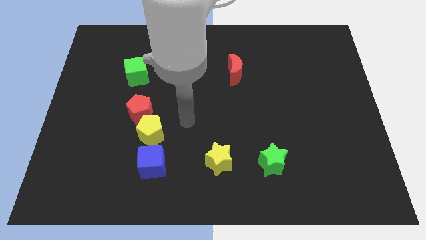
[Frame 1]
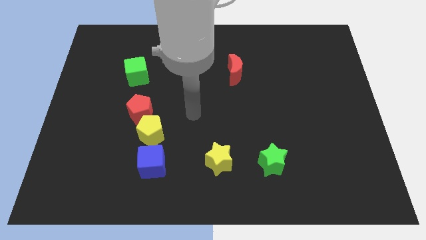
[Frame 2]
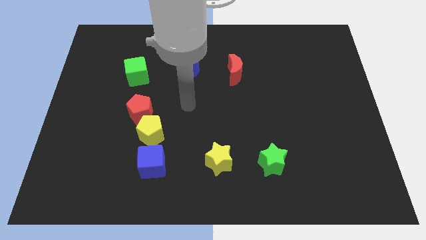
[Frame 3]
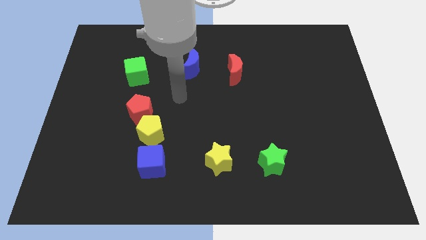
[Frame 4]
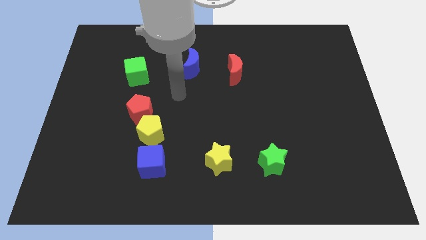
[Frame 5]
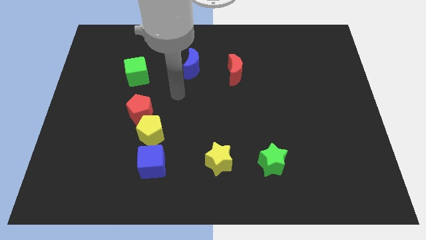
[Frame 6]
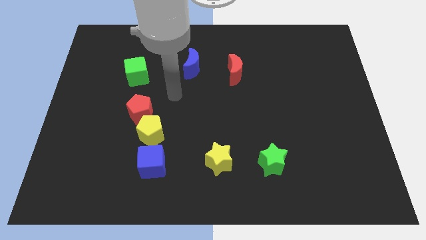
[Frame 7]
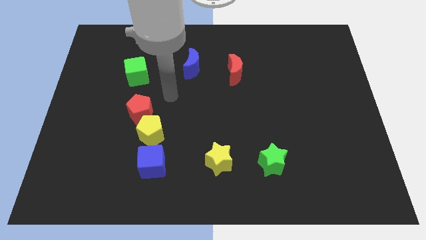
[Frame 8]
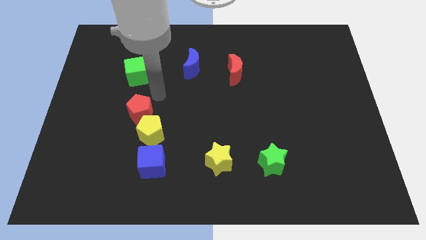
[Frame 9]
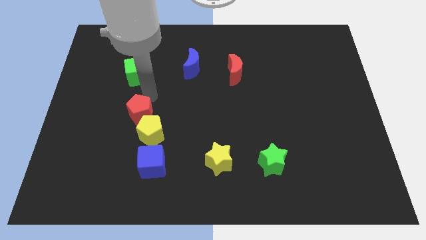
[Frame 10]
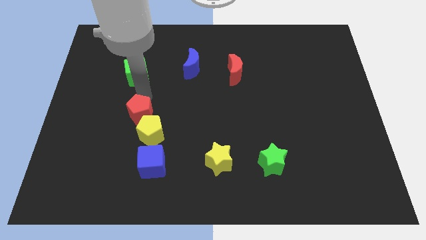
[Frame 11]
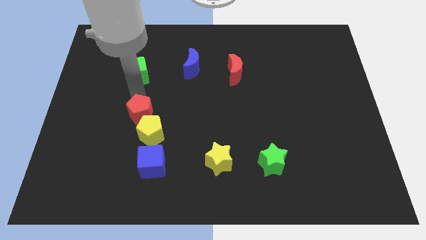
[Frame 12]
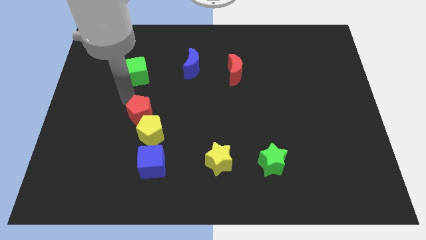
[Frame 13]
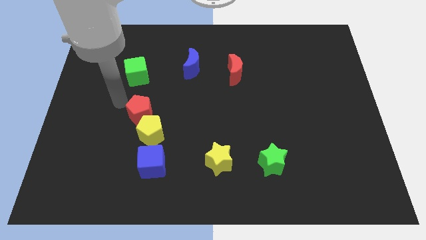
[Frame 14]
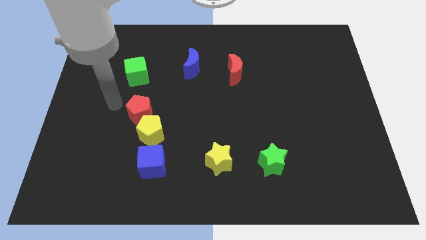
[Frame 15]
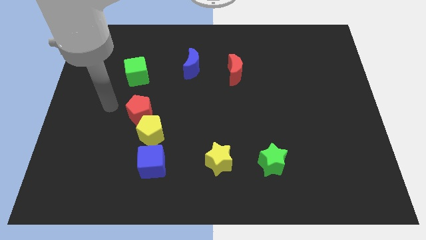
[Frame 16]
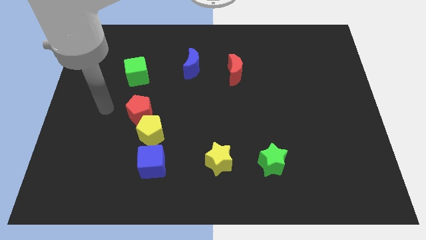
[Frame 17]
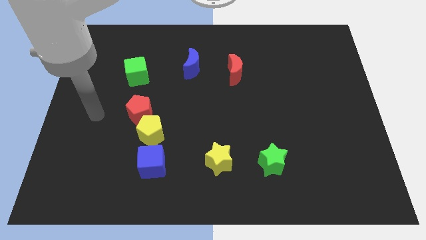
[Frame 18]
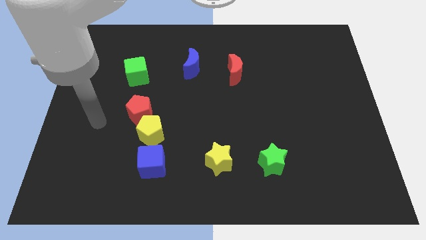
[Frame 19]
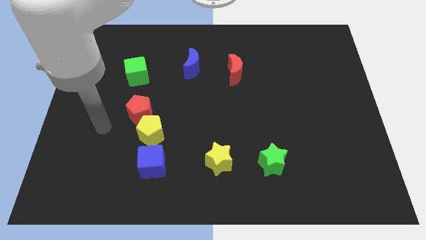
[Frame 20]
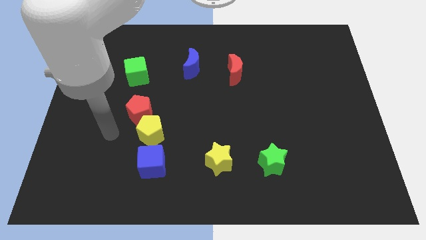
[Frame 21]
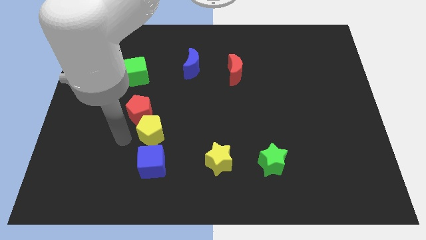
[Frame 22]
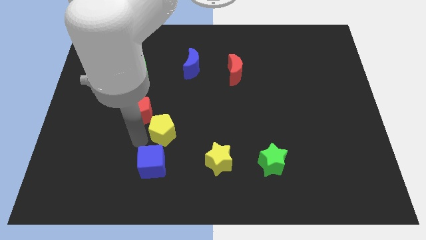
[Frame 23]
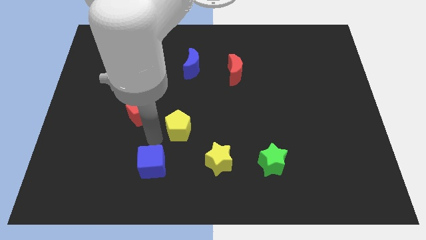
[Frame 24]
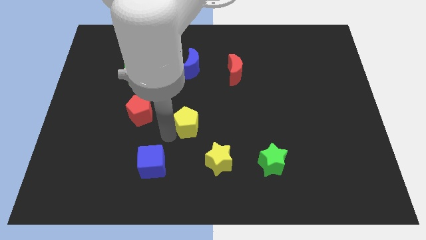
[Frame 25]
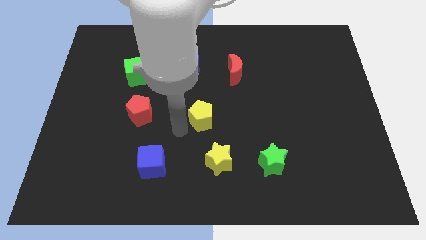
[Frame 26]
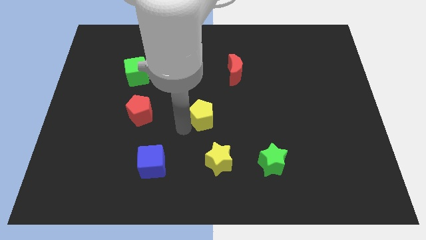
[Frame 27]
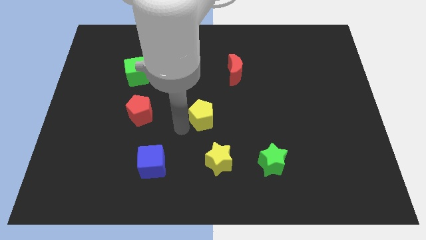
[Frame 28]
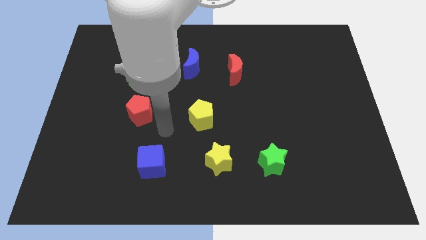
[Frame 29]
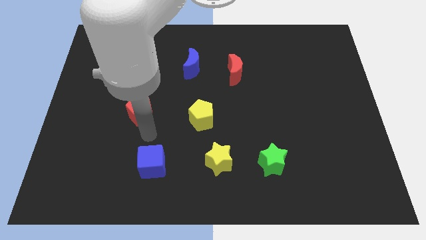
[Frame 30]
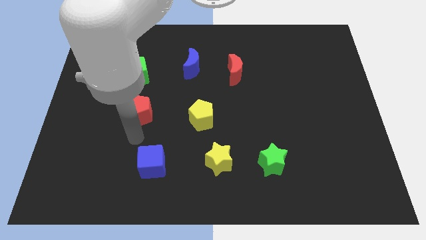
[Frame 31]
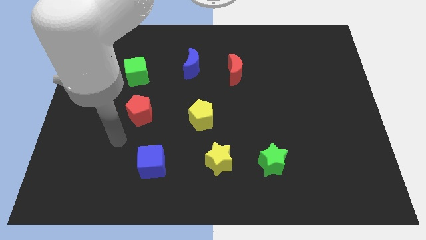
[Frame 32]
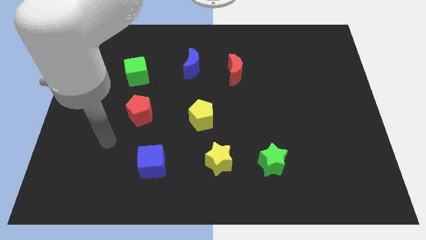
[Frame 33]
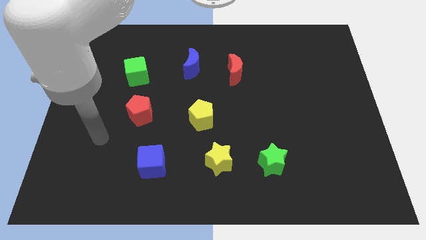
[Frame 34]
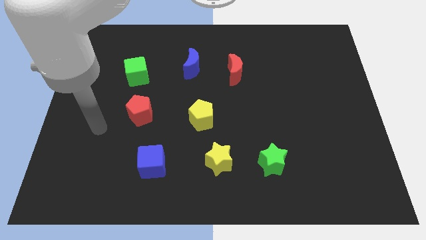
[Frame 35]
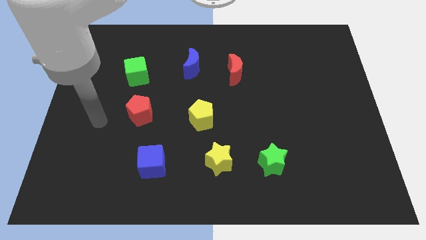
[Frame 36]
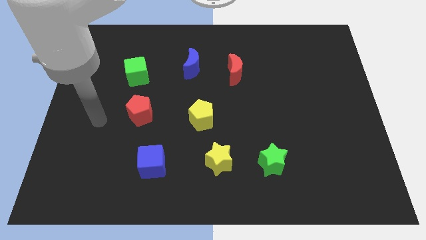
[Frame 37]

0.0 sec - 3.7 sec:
move the yellow pentagon below blue crescent

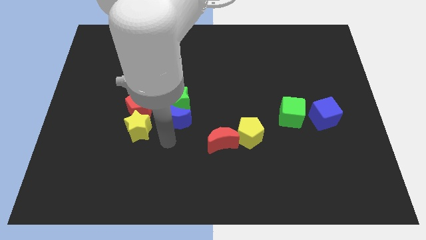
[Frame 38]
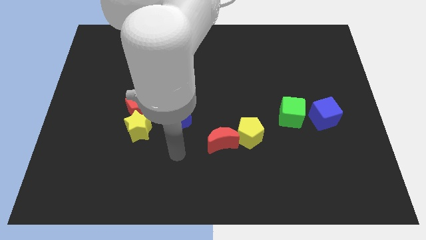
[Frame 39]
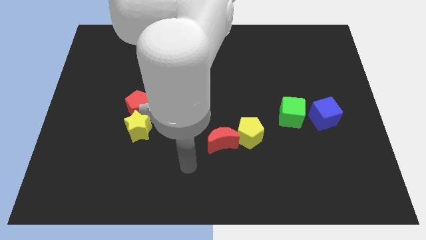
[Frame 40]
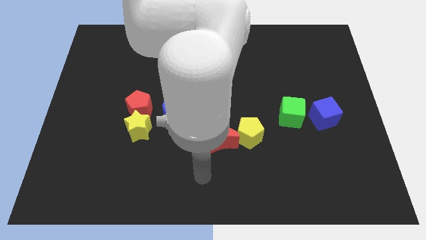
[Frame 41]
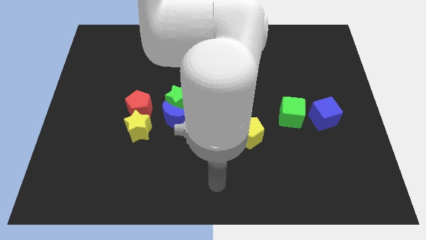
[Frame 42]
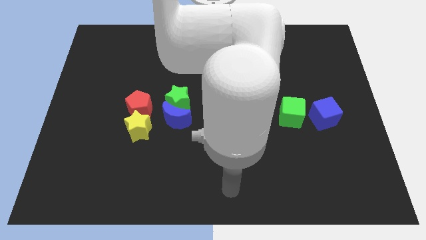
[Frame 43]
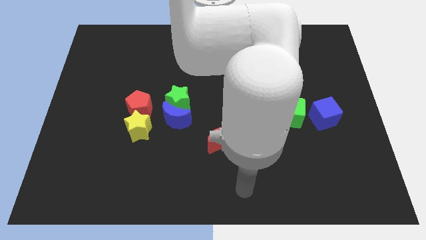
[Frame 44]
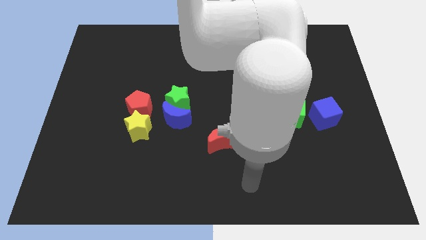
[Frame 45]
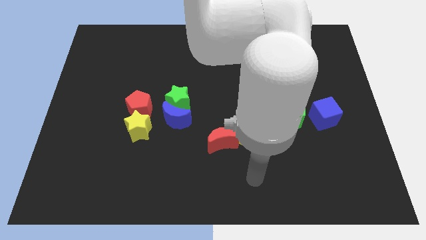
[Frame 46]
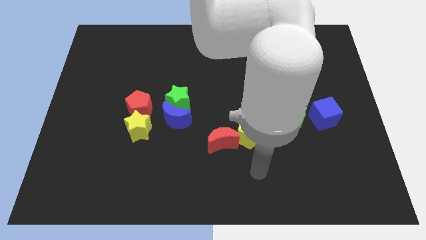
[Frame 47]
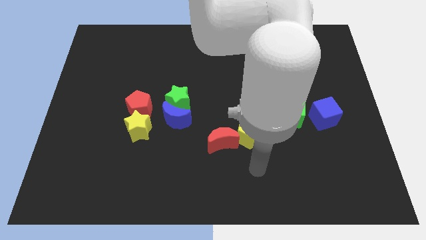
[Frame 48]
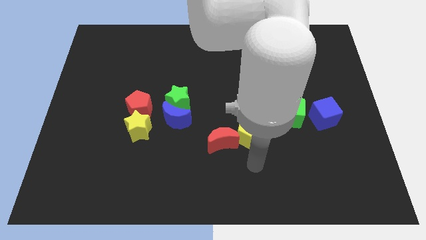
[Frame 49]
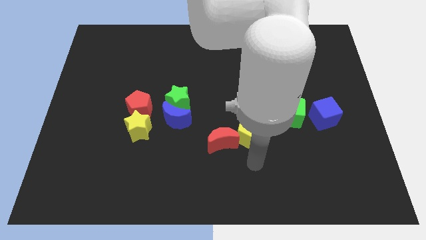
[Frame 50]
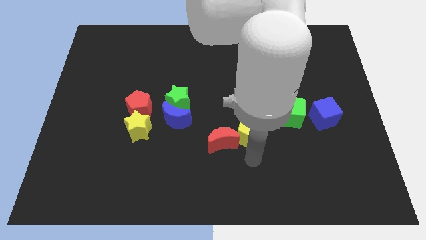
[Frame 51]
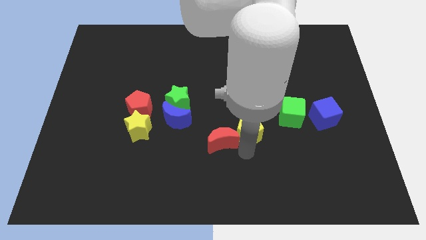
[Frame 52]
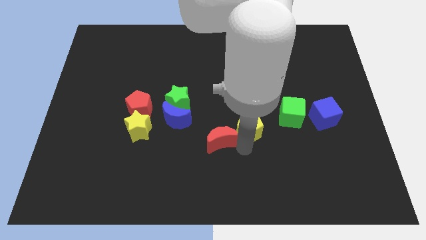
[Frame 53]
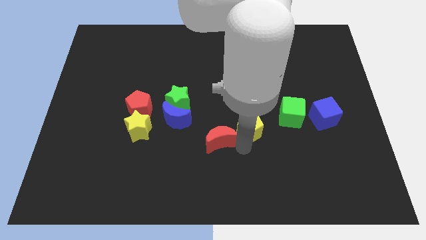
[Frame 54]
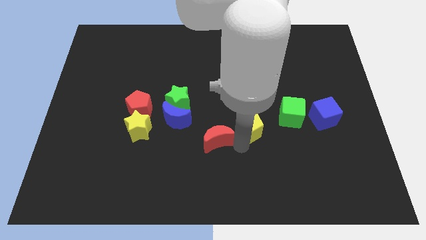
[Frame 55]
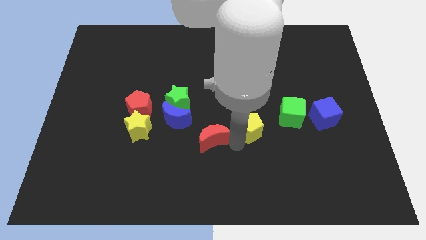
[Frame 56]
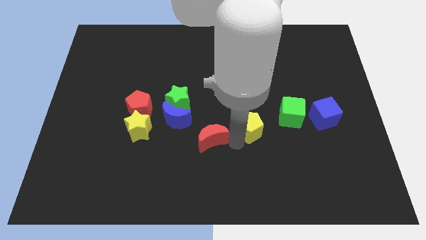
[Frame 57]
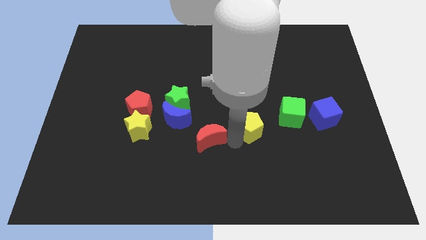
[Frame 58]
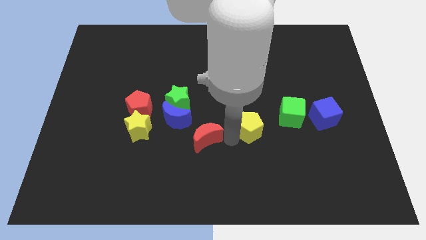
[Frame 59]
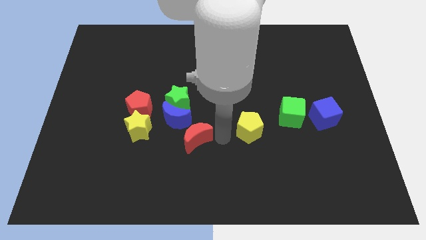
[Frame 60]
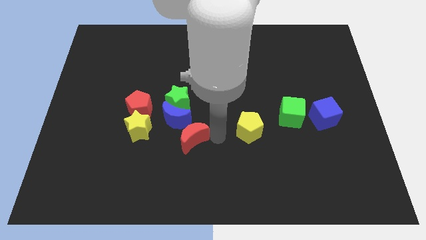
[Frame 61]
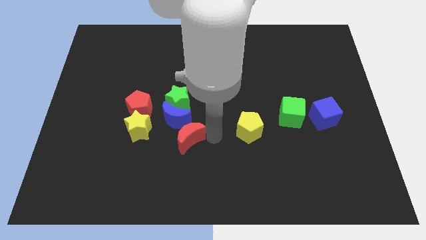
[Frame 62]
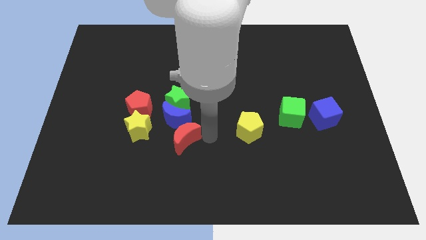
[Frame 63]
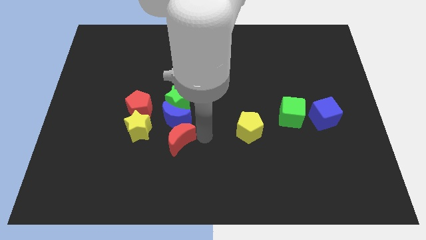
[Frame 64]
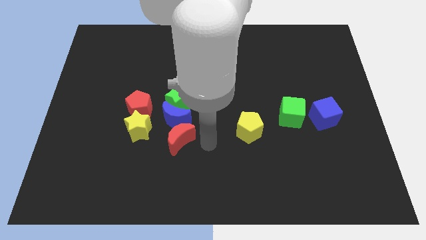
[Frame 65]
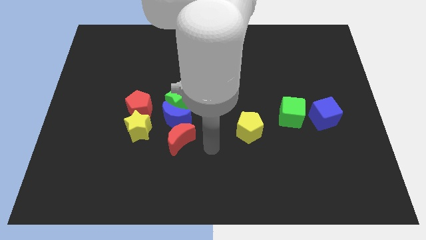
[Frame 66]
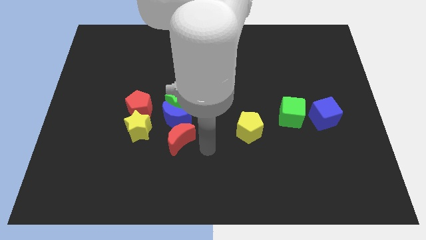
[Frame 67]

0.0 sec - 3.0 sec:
move the red crescent to the bottom of the blue crescent

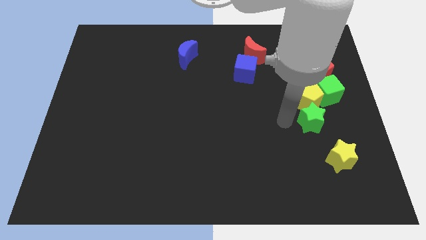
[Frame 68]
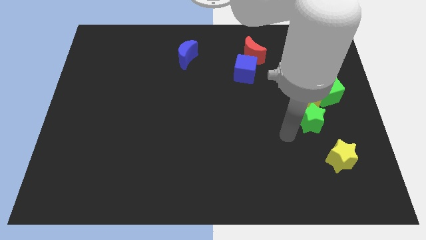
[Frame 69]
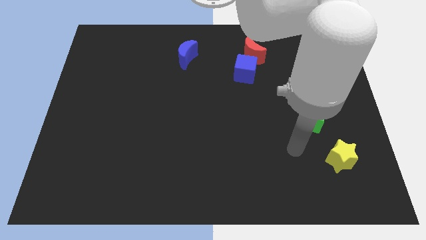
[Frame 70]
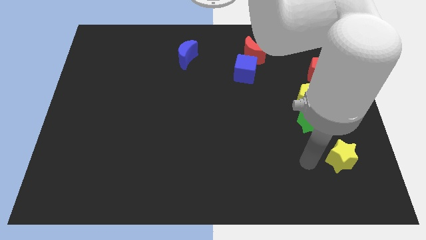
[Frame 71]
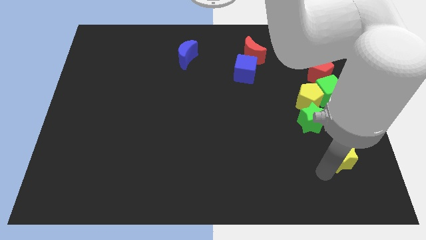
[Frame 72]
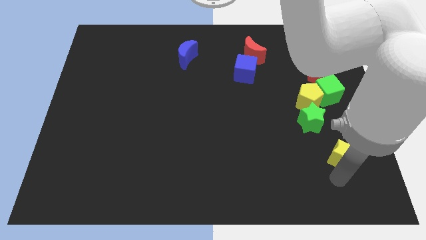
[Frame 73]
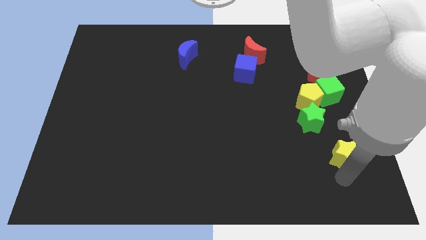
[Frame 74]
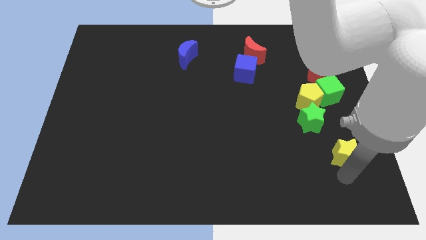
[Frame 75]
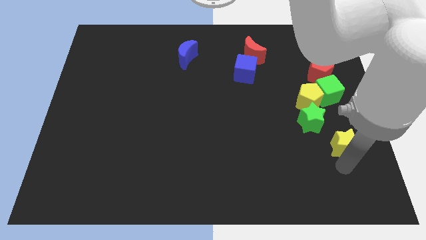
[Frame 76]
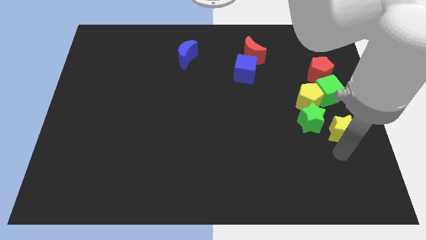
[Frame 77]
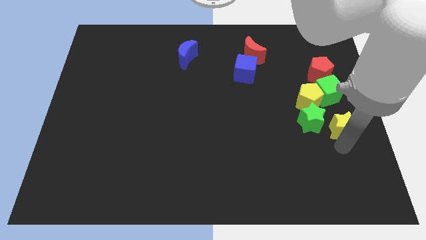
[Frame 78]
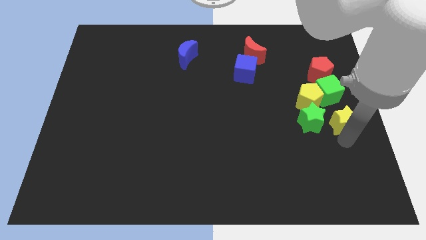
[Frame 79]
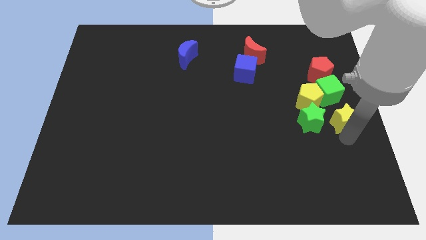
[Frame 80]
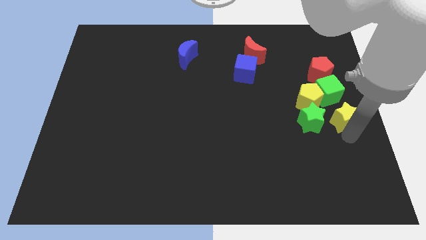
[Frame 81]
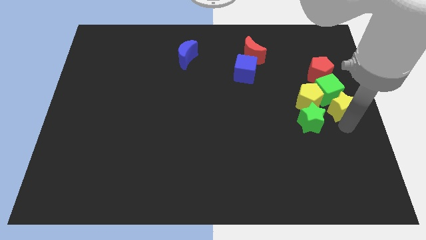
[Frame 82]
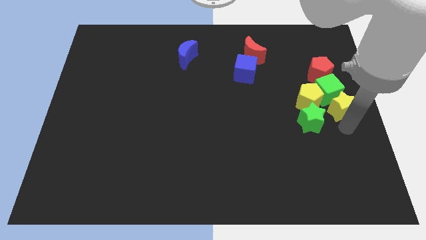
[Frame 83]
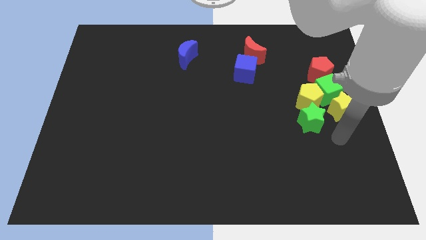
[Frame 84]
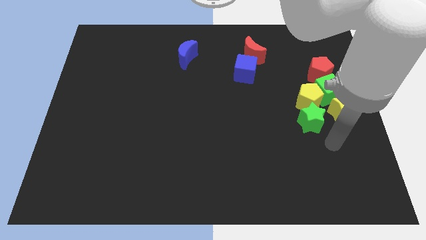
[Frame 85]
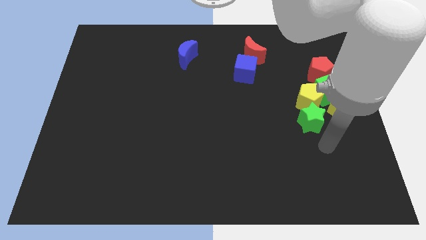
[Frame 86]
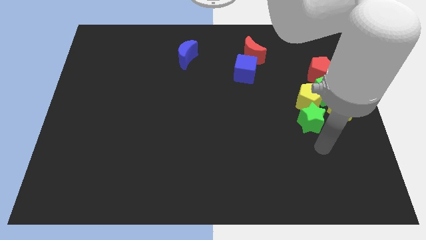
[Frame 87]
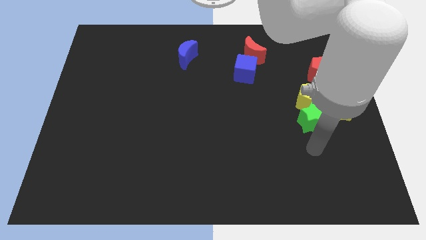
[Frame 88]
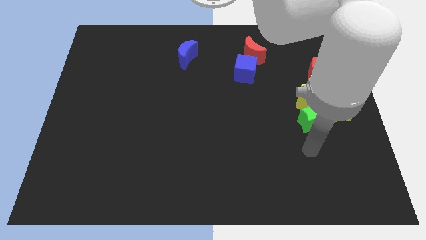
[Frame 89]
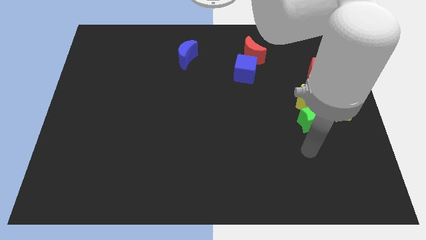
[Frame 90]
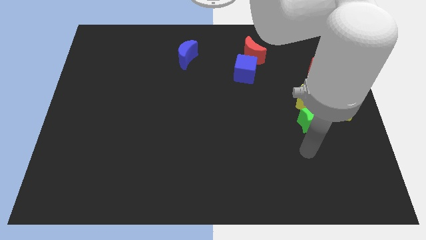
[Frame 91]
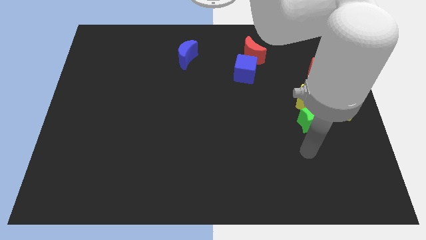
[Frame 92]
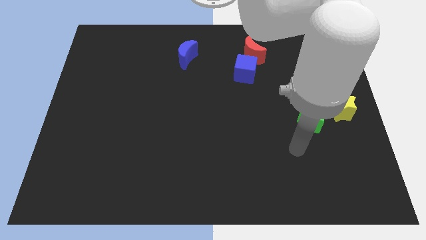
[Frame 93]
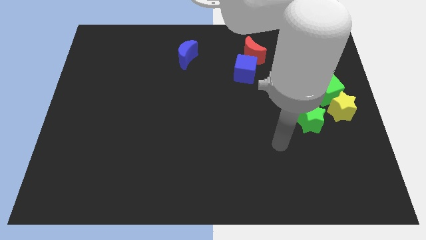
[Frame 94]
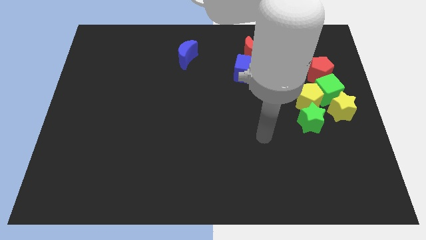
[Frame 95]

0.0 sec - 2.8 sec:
place the yellow star to the right side of green star
